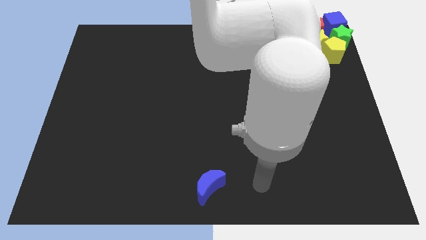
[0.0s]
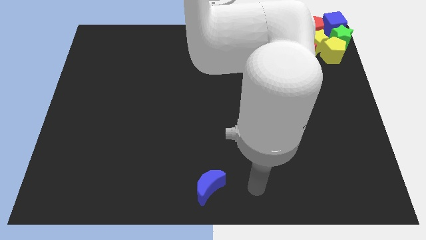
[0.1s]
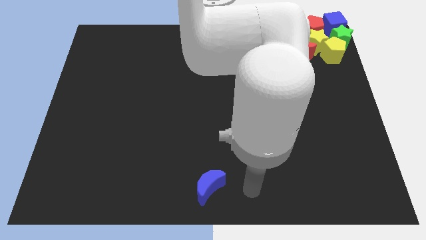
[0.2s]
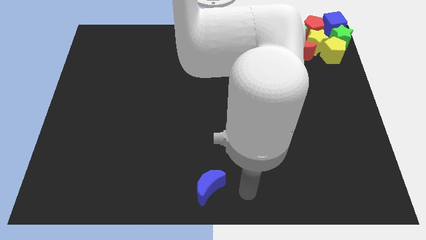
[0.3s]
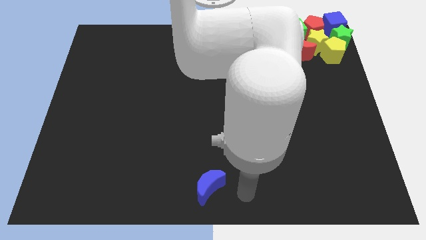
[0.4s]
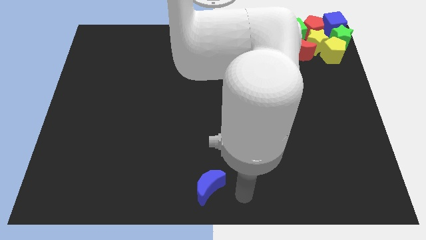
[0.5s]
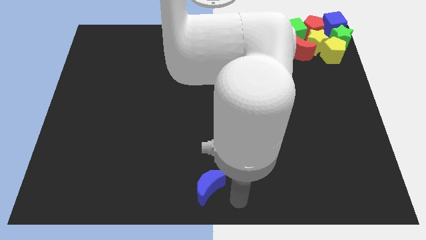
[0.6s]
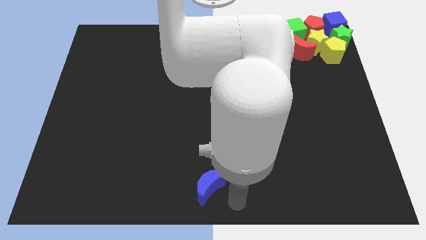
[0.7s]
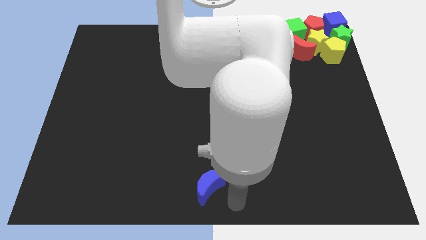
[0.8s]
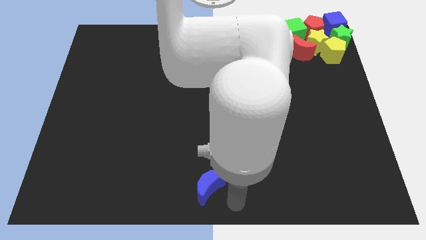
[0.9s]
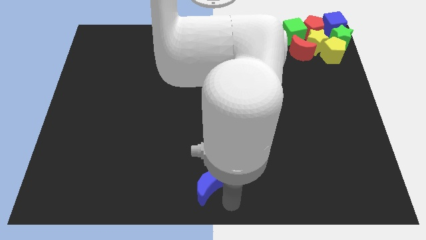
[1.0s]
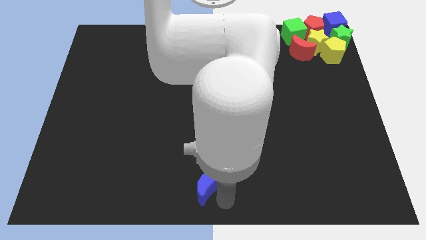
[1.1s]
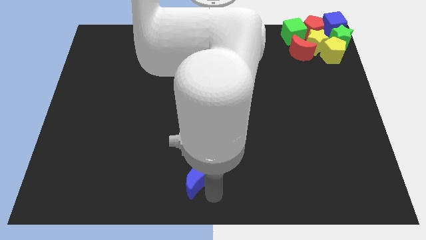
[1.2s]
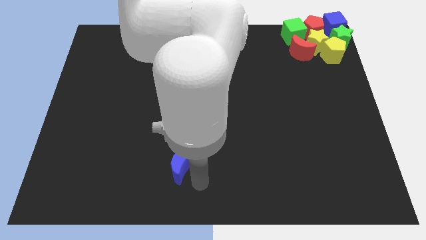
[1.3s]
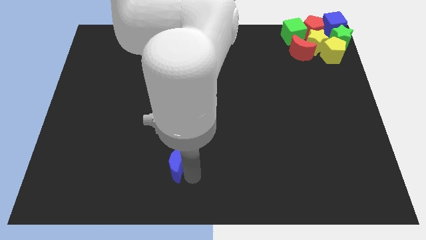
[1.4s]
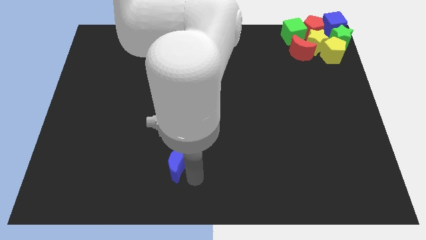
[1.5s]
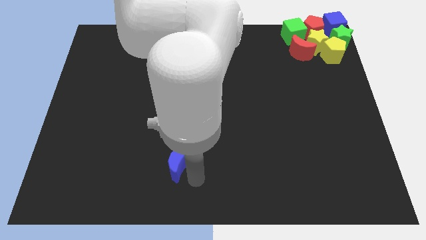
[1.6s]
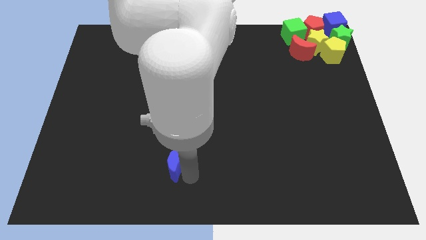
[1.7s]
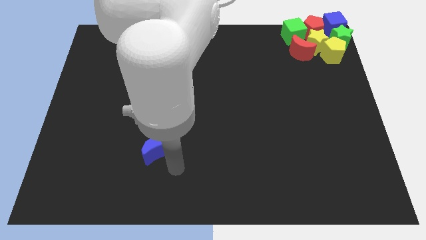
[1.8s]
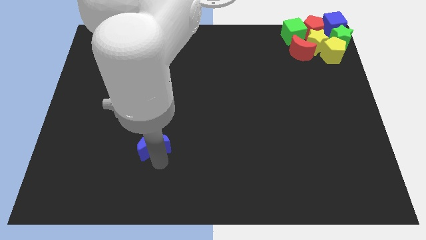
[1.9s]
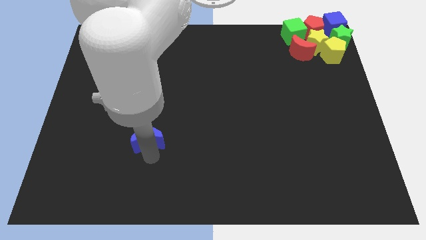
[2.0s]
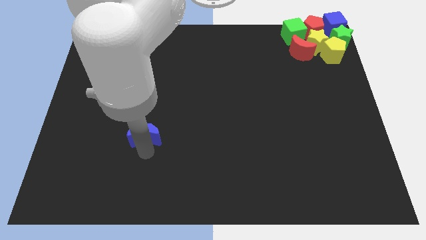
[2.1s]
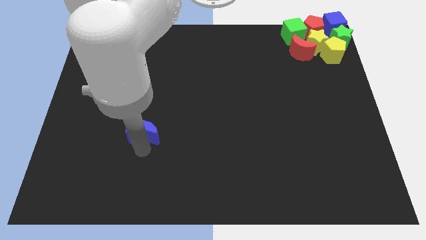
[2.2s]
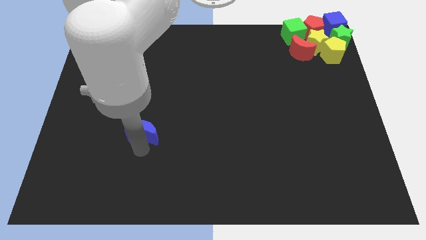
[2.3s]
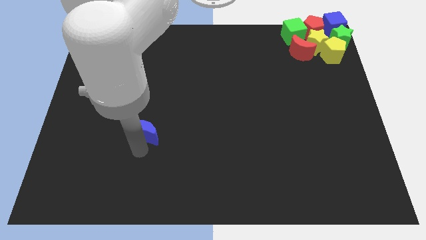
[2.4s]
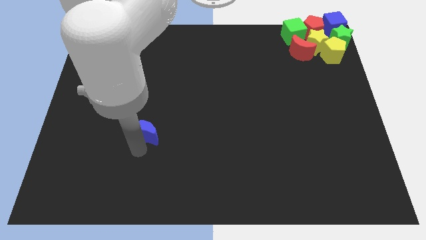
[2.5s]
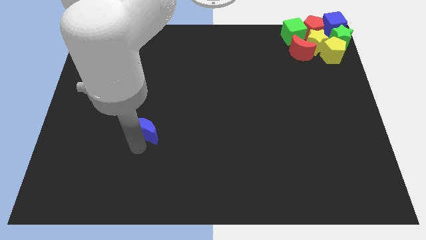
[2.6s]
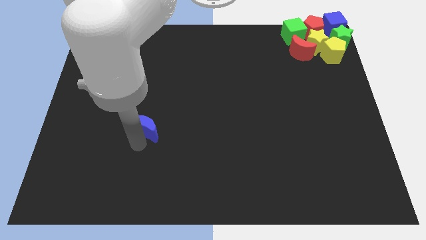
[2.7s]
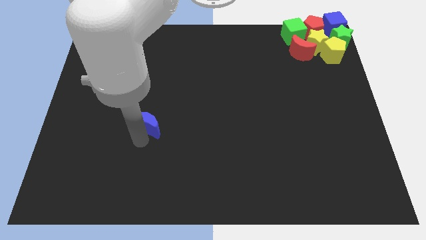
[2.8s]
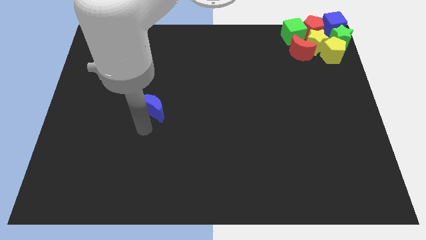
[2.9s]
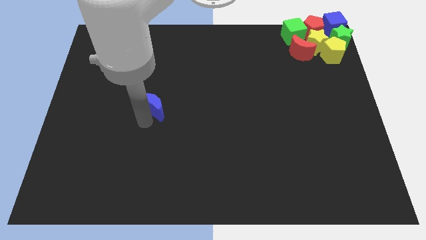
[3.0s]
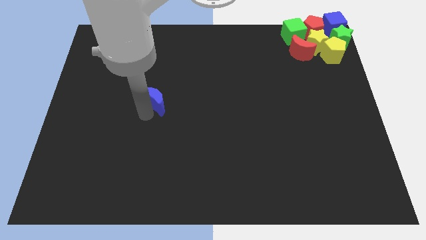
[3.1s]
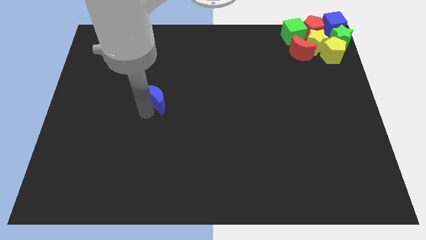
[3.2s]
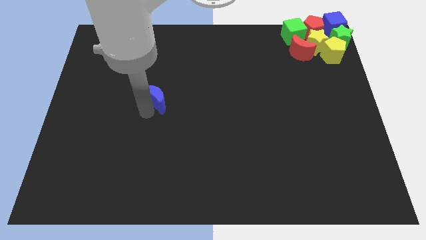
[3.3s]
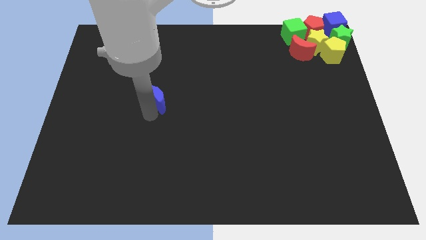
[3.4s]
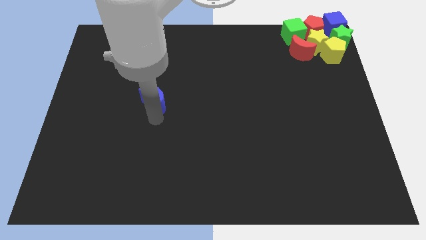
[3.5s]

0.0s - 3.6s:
move the blue moon towards the top side

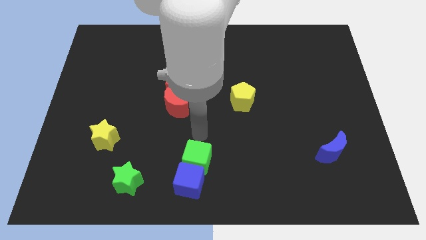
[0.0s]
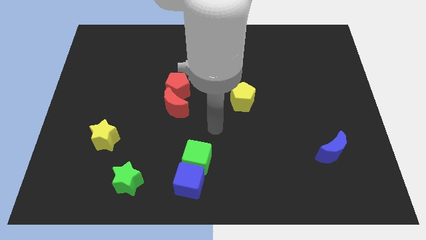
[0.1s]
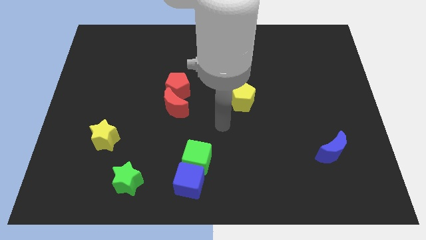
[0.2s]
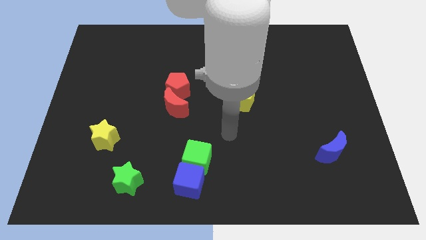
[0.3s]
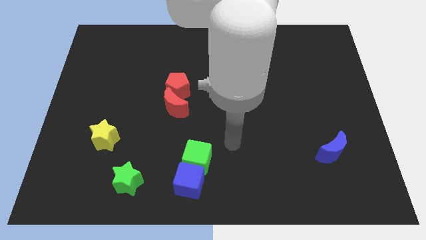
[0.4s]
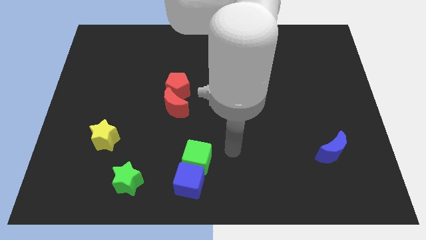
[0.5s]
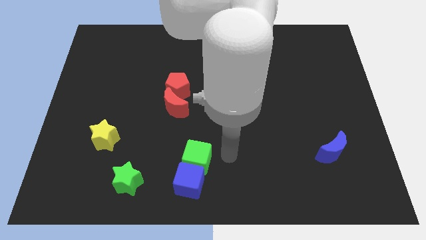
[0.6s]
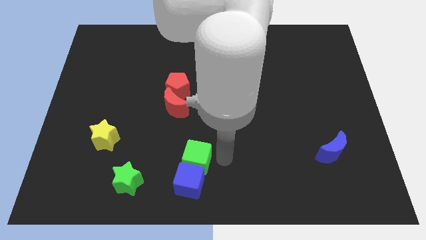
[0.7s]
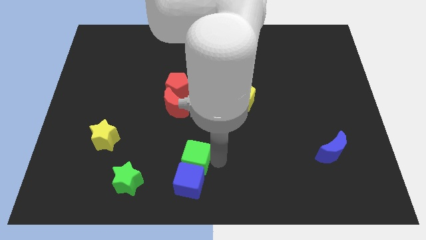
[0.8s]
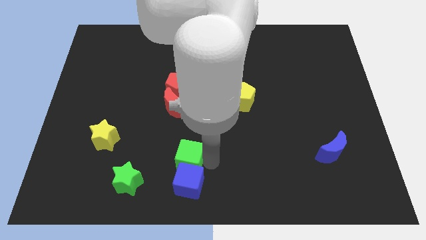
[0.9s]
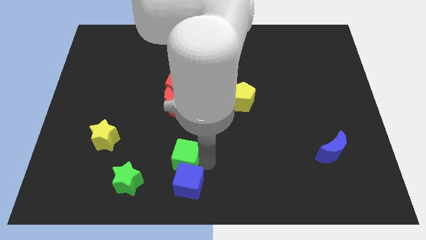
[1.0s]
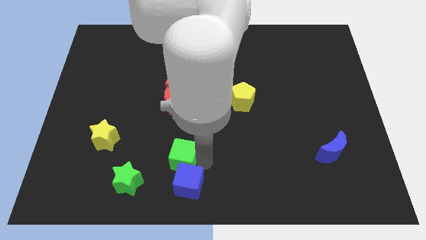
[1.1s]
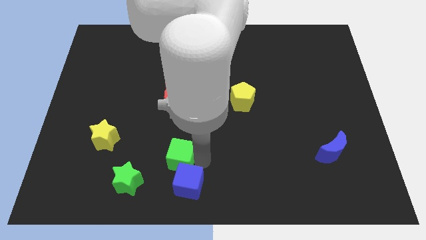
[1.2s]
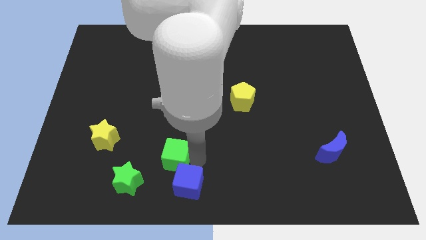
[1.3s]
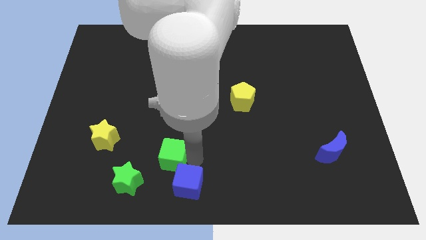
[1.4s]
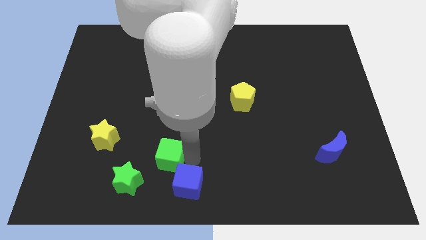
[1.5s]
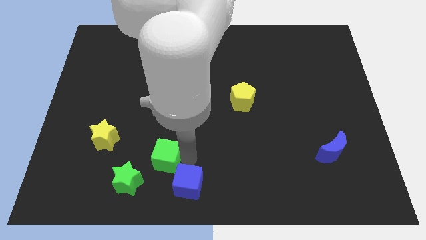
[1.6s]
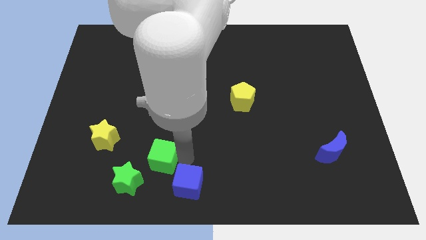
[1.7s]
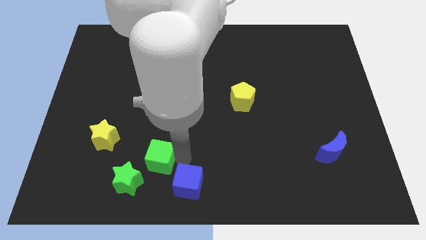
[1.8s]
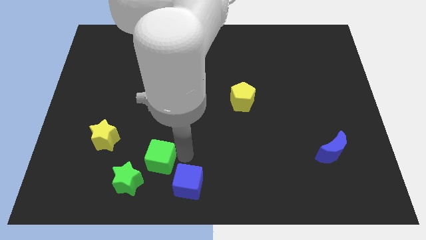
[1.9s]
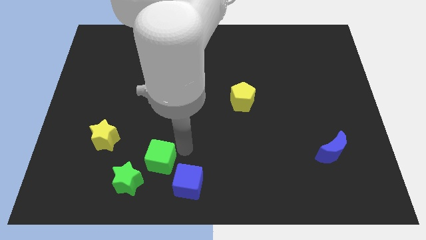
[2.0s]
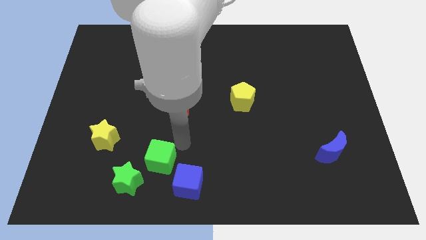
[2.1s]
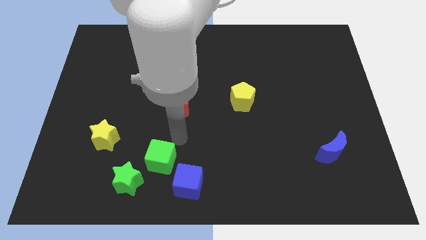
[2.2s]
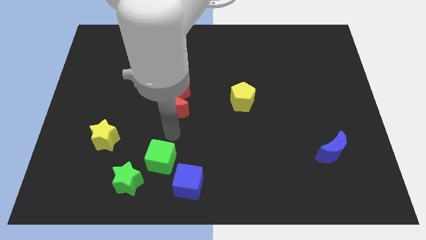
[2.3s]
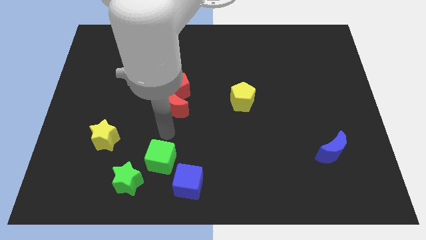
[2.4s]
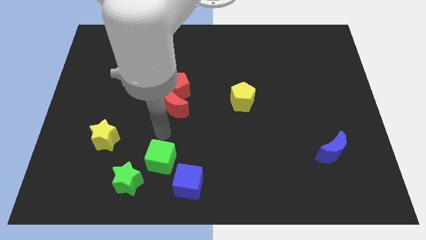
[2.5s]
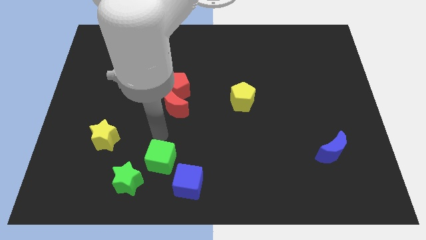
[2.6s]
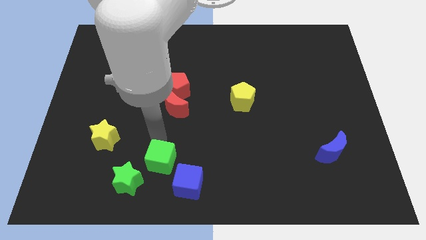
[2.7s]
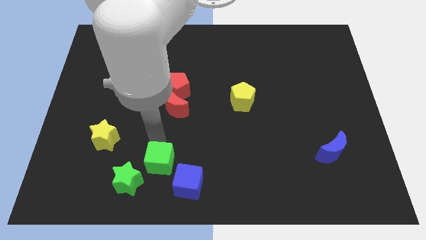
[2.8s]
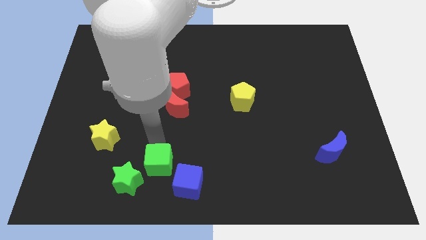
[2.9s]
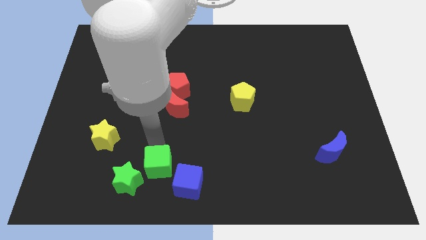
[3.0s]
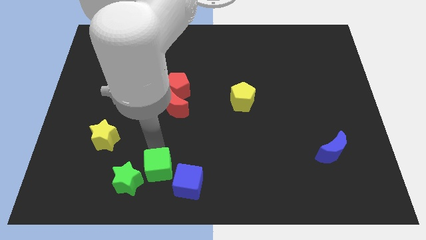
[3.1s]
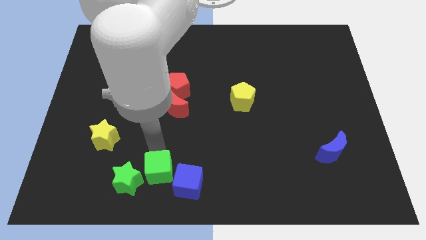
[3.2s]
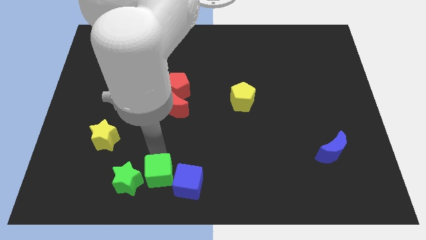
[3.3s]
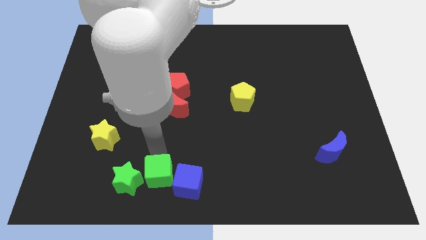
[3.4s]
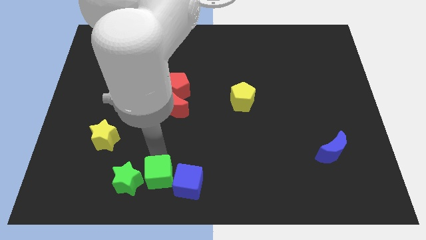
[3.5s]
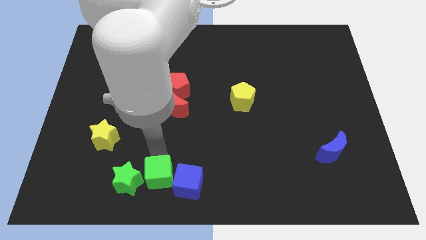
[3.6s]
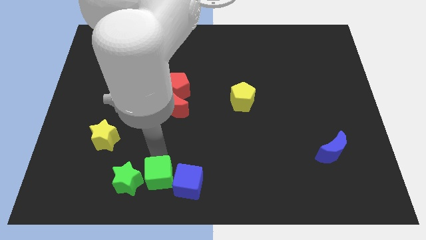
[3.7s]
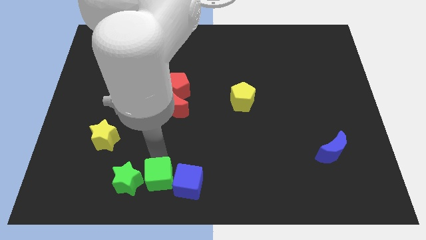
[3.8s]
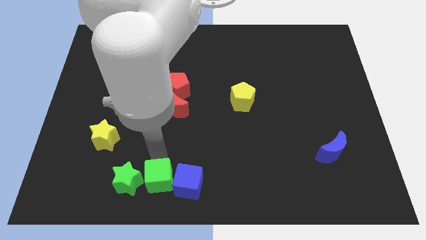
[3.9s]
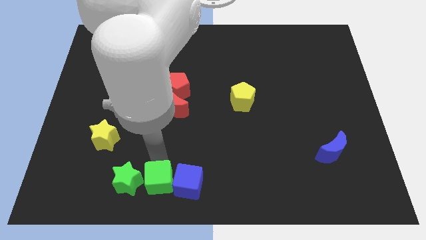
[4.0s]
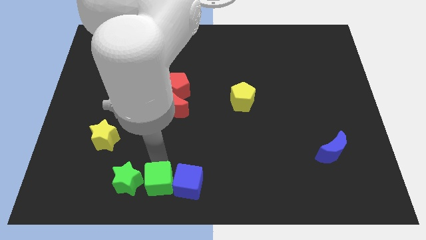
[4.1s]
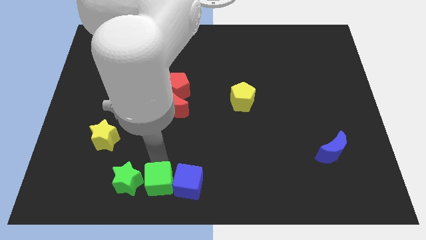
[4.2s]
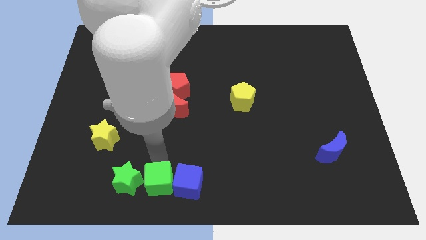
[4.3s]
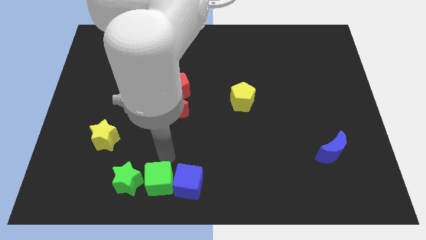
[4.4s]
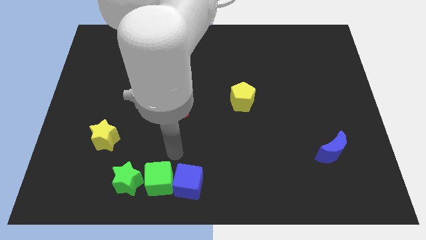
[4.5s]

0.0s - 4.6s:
place the green cube horizontally in between the green star and blue cube

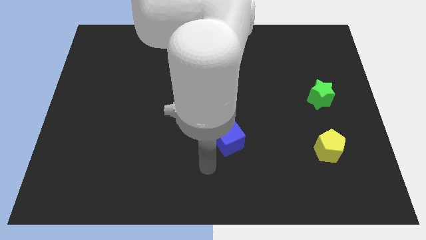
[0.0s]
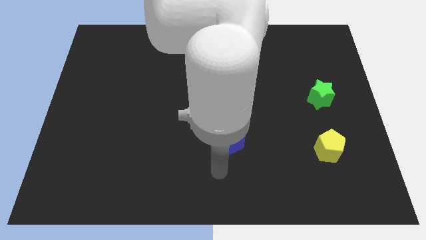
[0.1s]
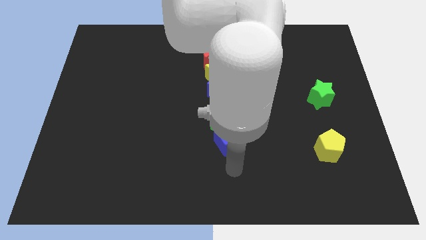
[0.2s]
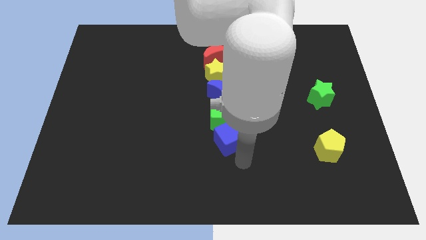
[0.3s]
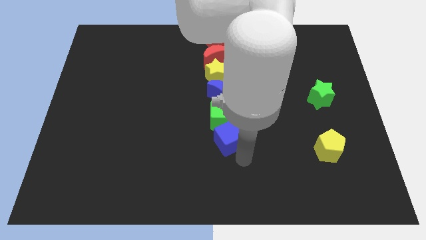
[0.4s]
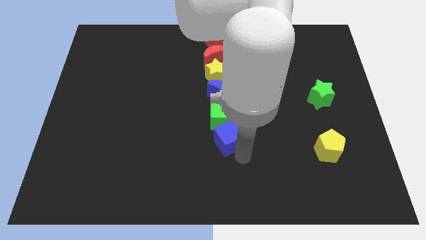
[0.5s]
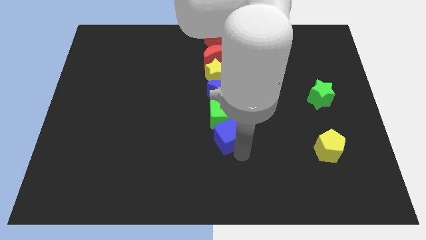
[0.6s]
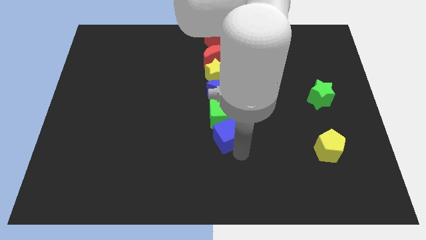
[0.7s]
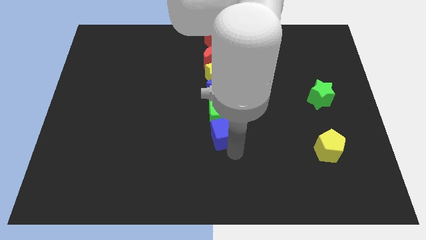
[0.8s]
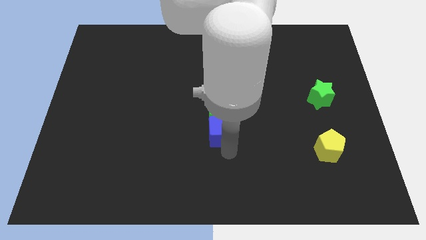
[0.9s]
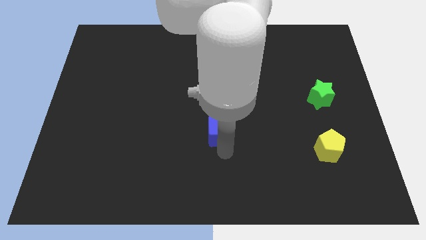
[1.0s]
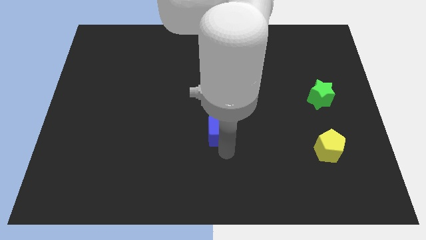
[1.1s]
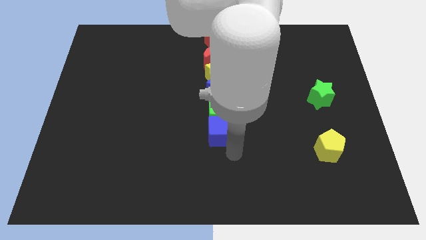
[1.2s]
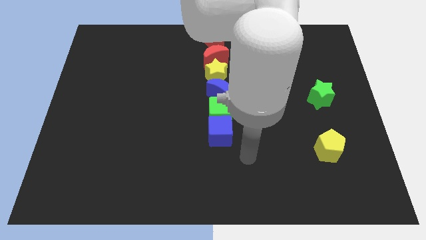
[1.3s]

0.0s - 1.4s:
push the blue cube into the green cube
